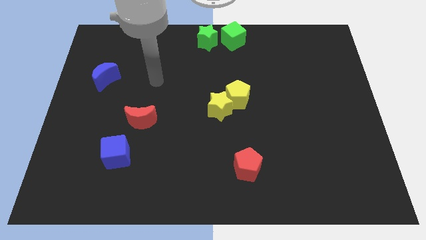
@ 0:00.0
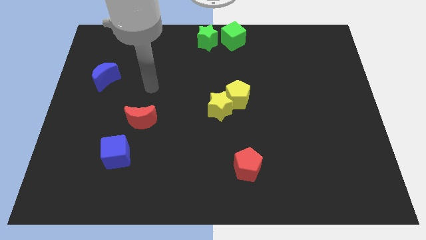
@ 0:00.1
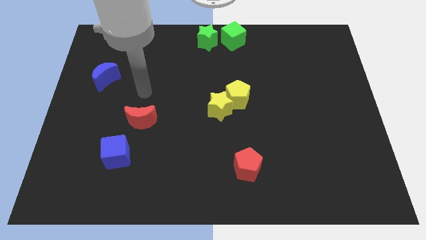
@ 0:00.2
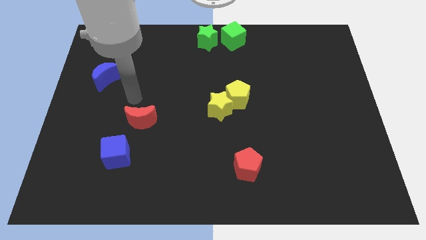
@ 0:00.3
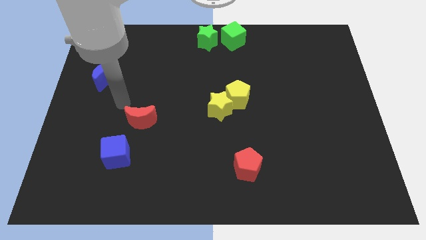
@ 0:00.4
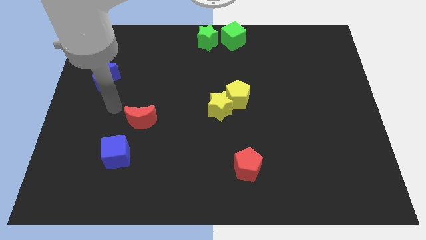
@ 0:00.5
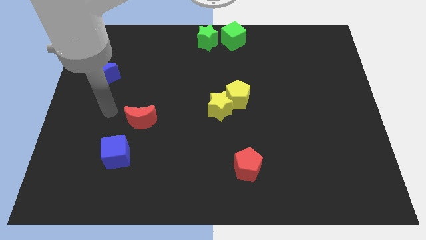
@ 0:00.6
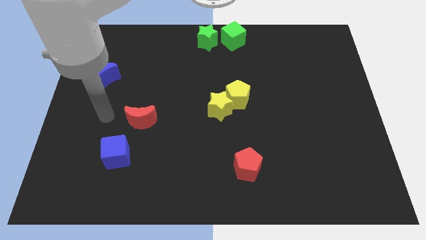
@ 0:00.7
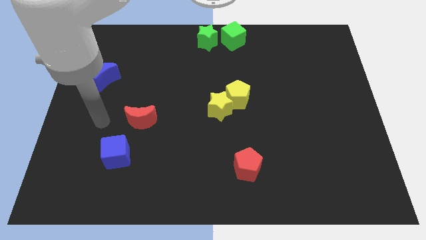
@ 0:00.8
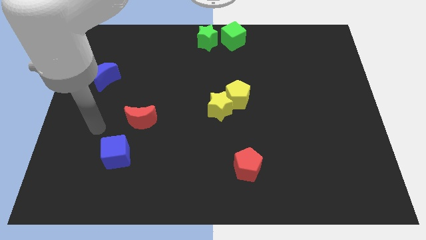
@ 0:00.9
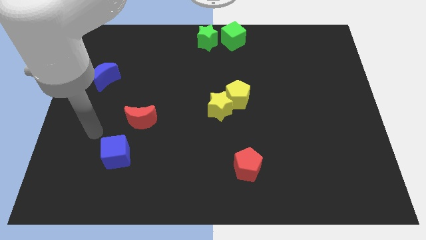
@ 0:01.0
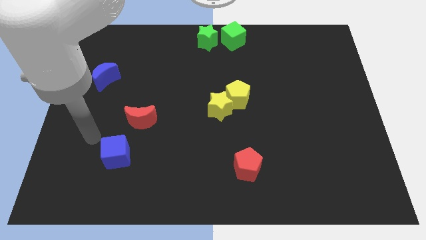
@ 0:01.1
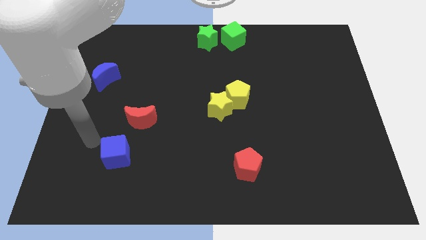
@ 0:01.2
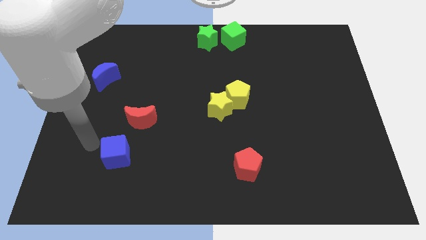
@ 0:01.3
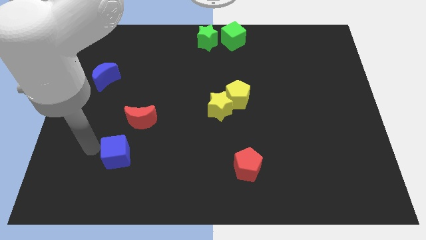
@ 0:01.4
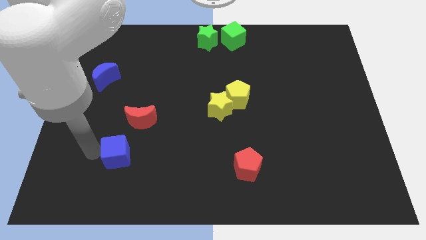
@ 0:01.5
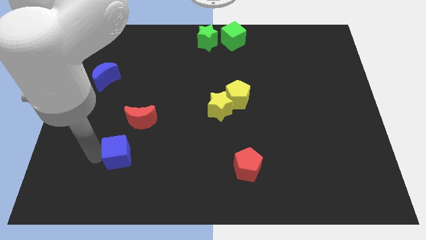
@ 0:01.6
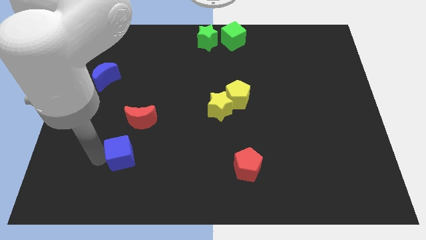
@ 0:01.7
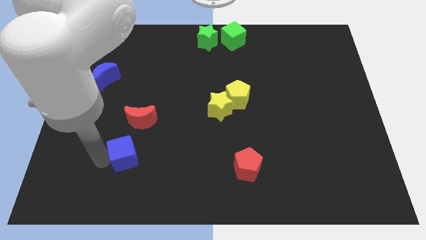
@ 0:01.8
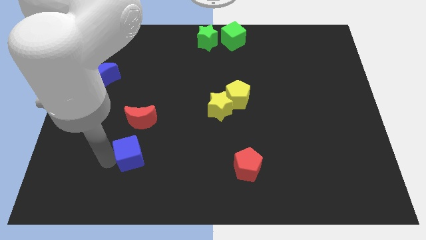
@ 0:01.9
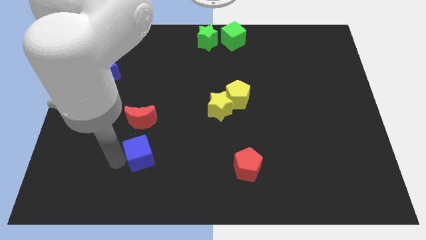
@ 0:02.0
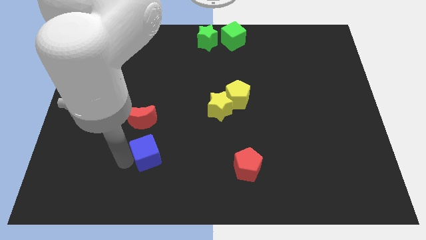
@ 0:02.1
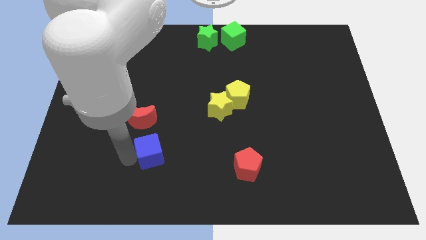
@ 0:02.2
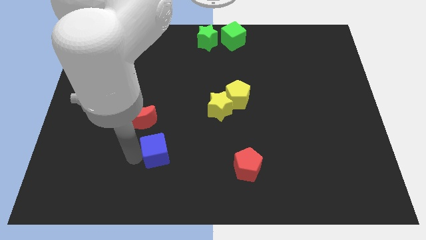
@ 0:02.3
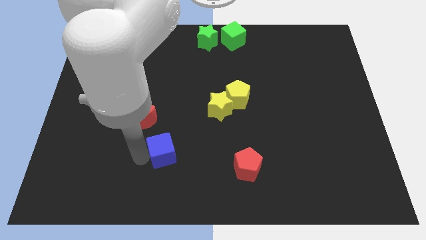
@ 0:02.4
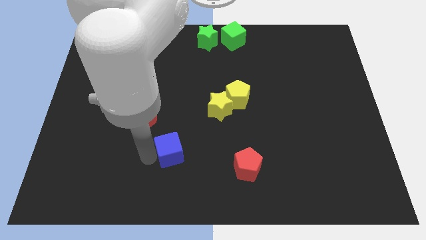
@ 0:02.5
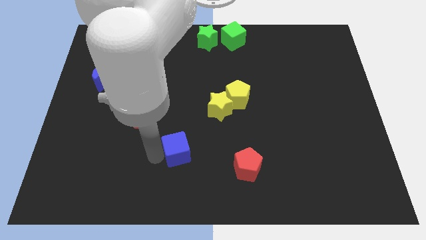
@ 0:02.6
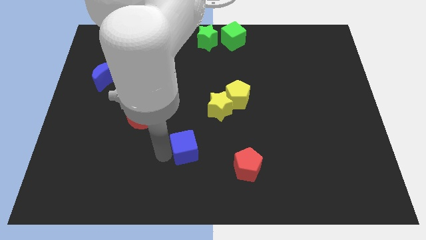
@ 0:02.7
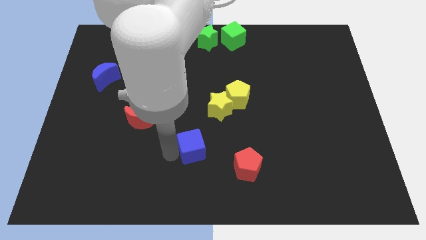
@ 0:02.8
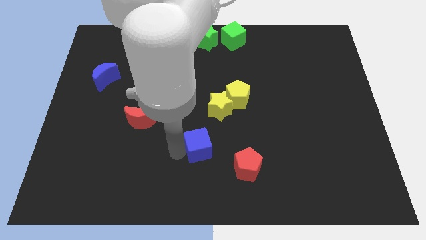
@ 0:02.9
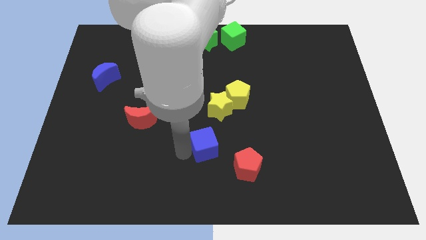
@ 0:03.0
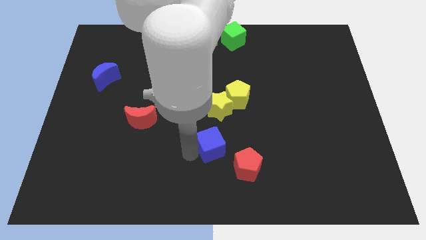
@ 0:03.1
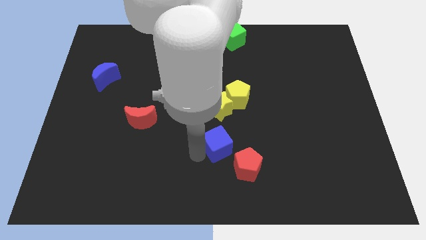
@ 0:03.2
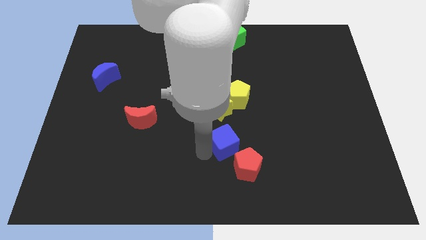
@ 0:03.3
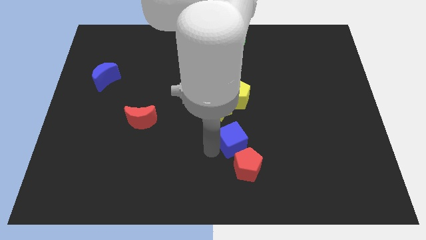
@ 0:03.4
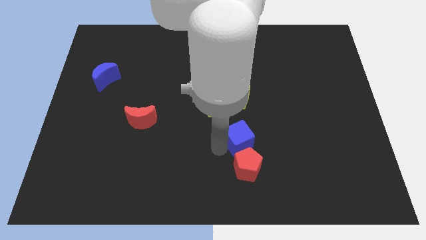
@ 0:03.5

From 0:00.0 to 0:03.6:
arrange the blue cube in between the red pentagon and the yellow star

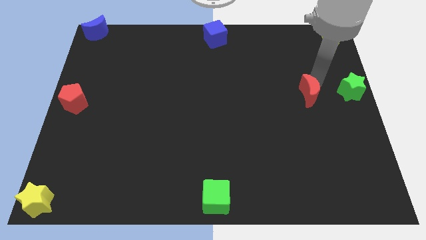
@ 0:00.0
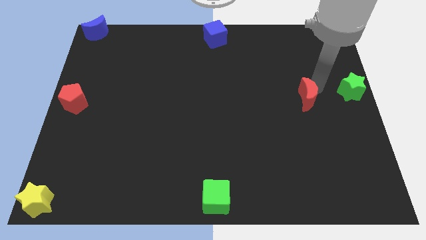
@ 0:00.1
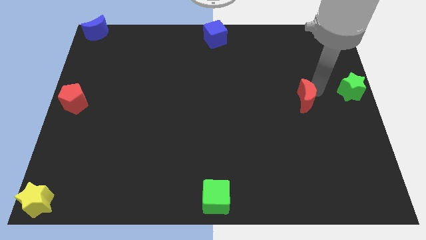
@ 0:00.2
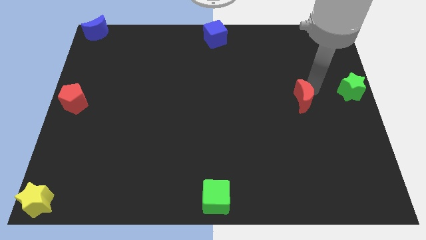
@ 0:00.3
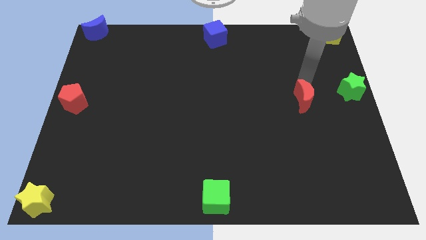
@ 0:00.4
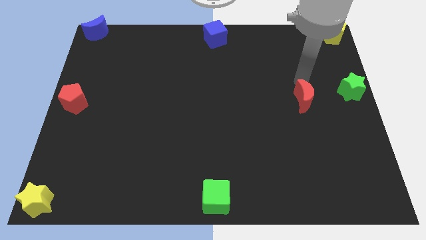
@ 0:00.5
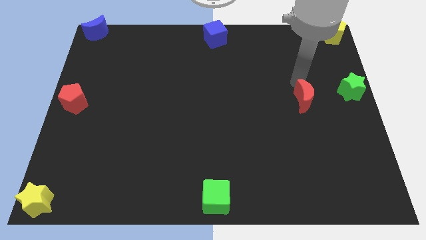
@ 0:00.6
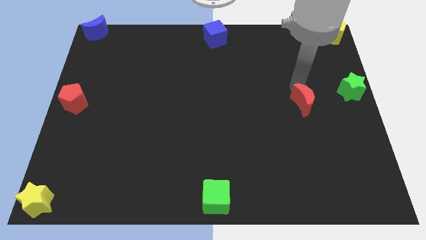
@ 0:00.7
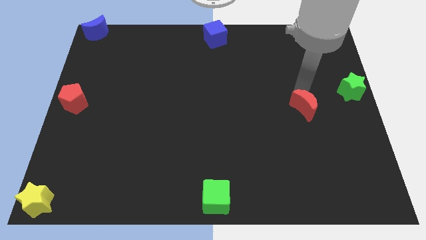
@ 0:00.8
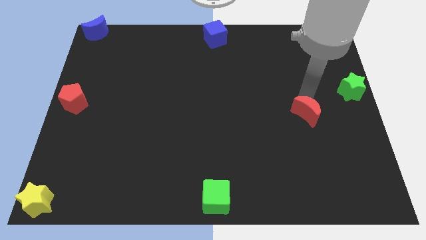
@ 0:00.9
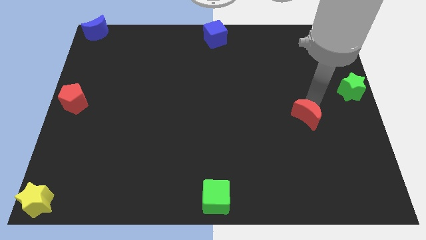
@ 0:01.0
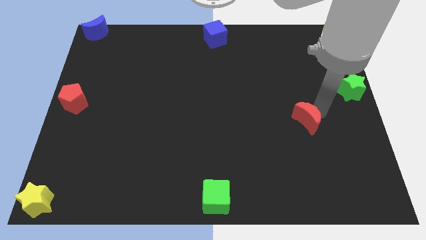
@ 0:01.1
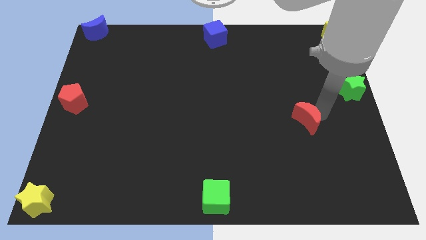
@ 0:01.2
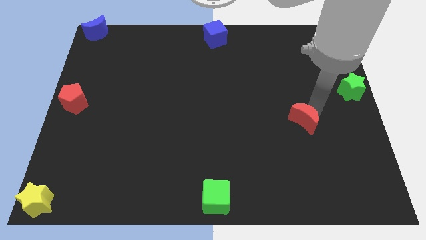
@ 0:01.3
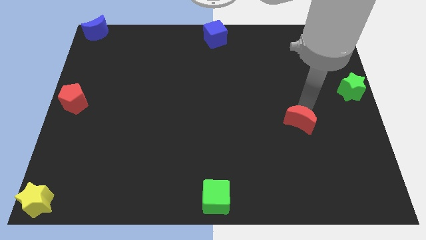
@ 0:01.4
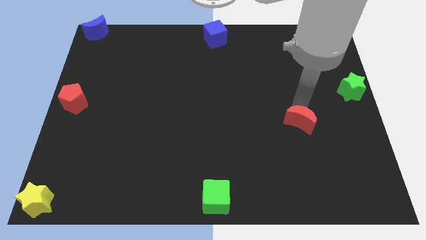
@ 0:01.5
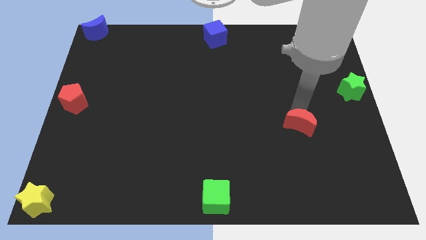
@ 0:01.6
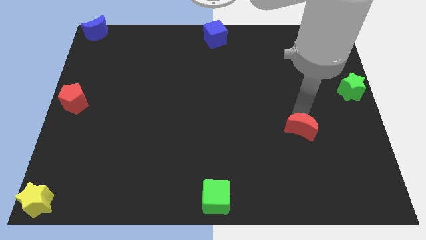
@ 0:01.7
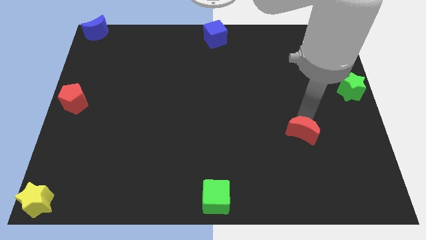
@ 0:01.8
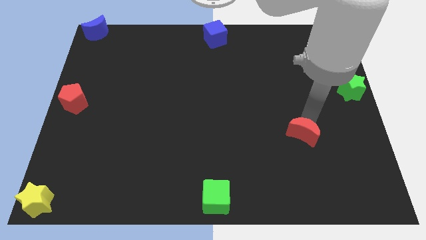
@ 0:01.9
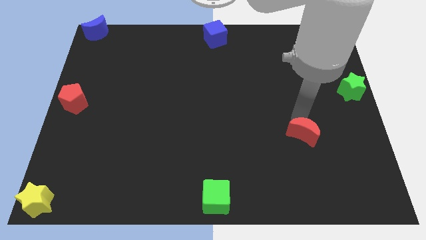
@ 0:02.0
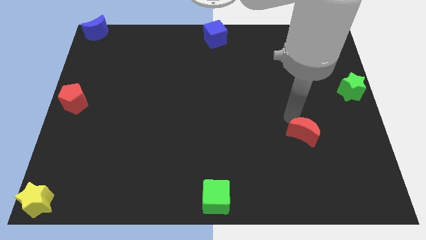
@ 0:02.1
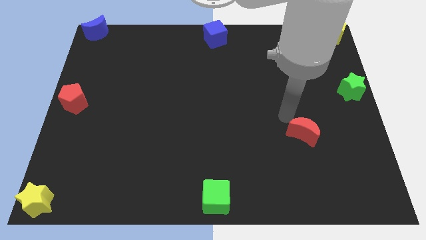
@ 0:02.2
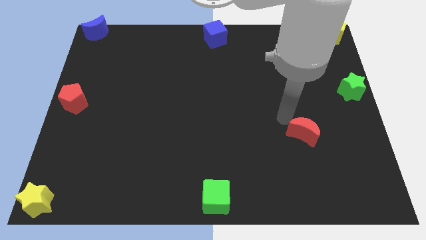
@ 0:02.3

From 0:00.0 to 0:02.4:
place the red moon in between the green blocks

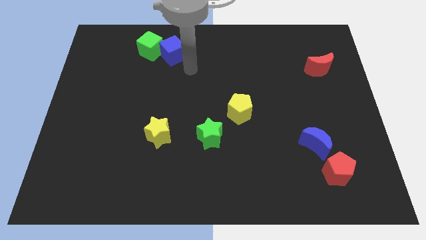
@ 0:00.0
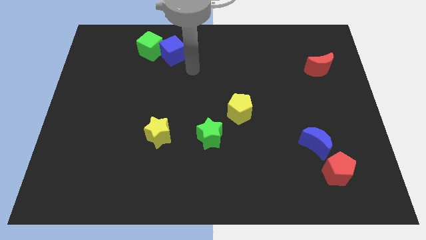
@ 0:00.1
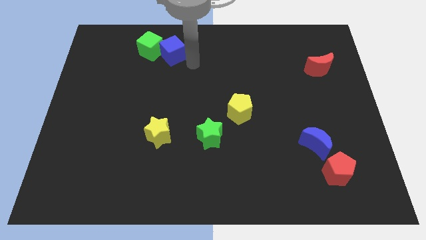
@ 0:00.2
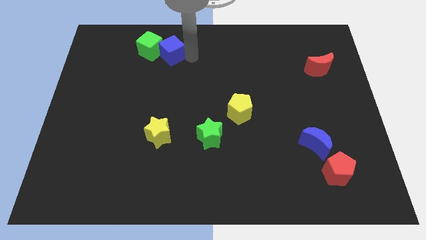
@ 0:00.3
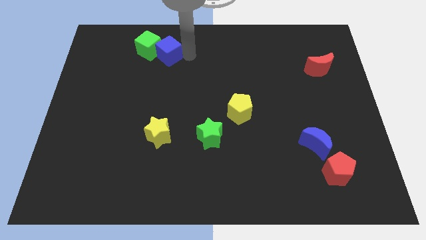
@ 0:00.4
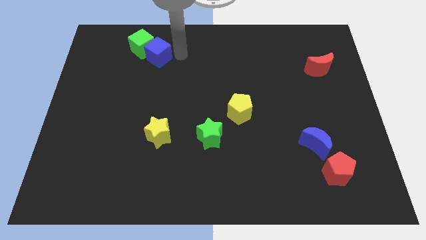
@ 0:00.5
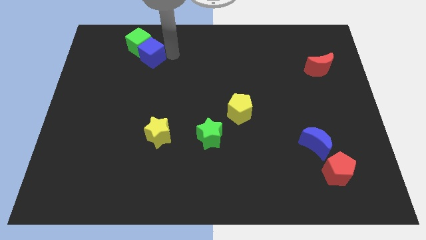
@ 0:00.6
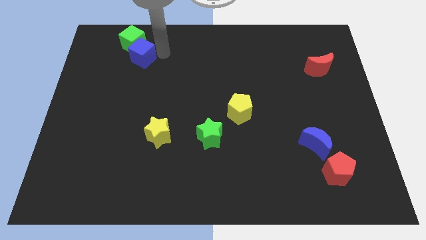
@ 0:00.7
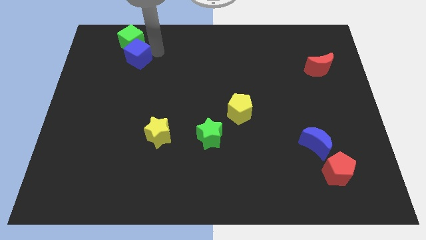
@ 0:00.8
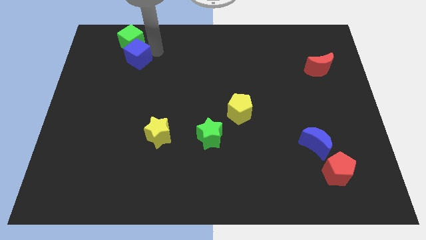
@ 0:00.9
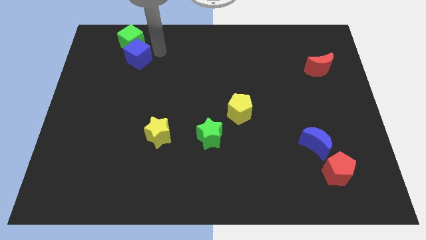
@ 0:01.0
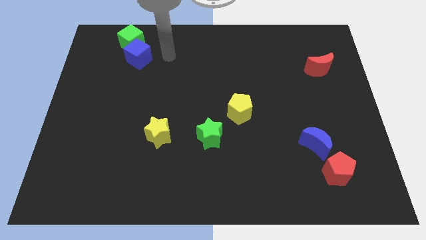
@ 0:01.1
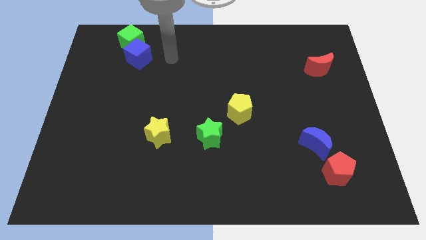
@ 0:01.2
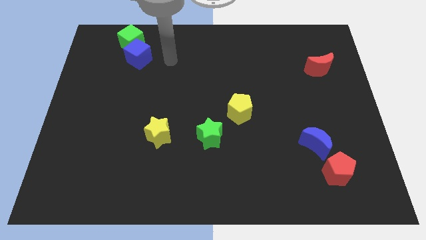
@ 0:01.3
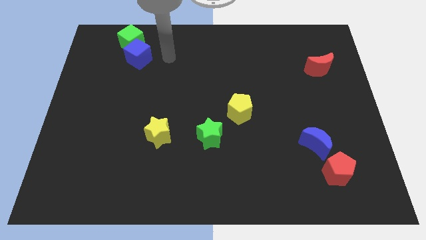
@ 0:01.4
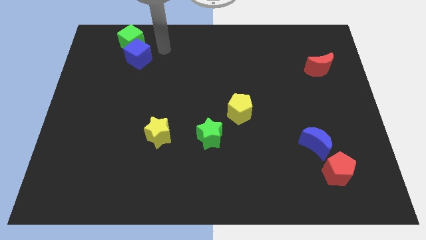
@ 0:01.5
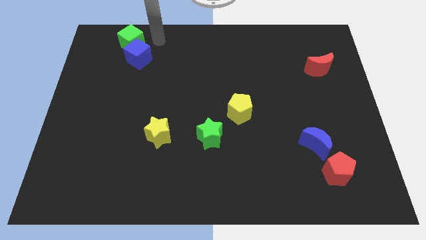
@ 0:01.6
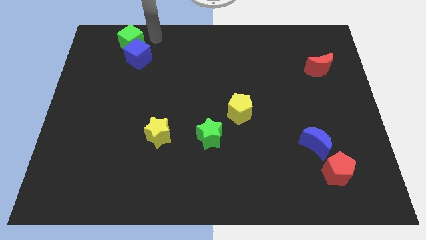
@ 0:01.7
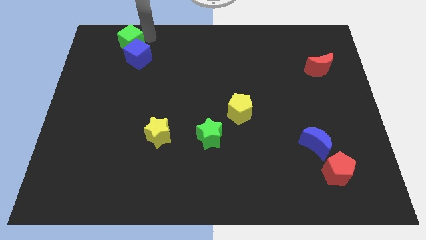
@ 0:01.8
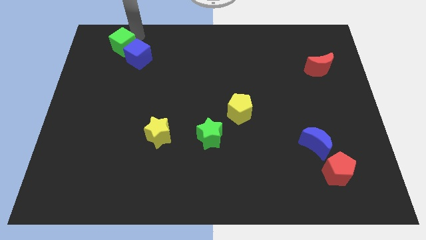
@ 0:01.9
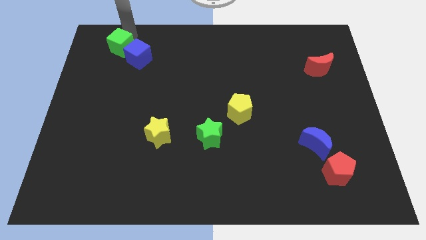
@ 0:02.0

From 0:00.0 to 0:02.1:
push the cubes towards top left side

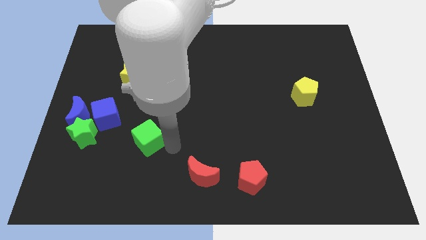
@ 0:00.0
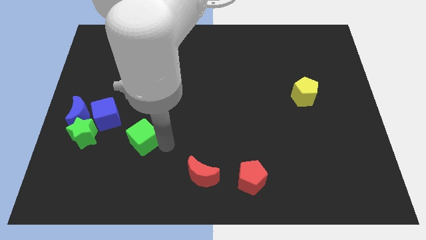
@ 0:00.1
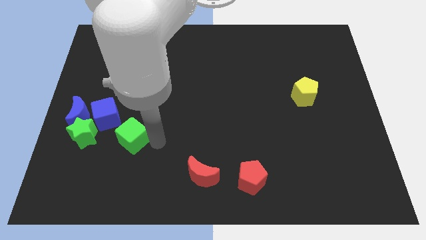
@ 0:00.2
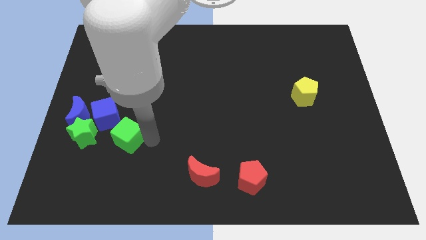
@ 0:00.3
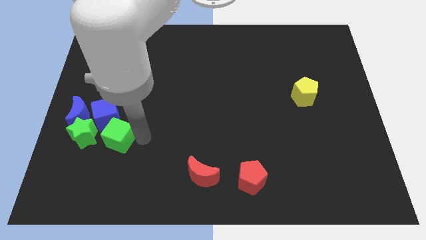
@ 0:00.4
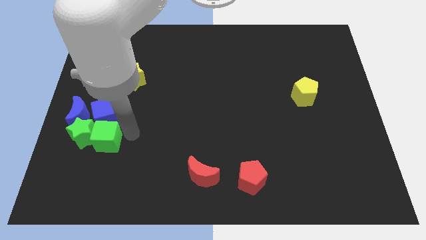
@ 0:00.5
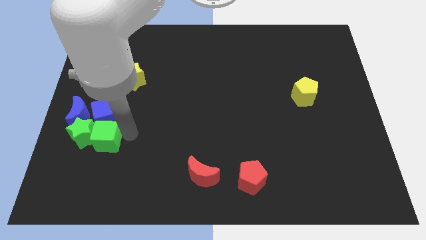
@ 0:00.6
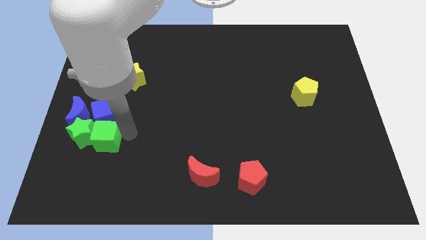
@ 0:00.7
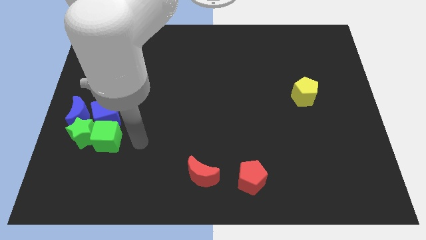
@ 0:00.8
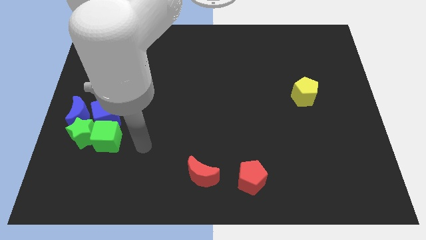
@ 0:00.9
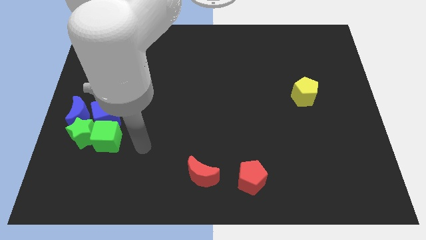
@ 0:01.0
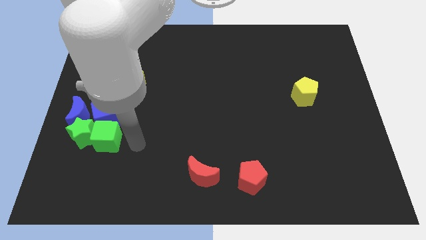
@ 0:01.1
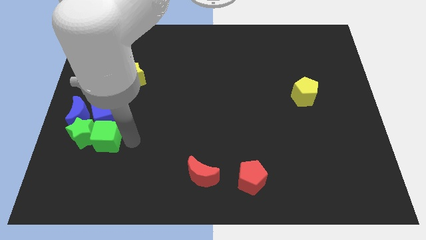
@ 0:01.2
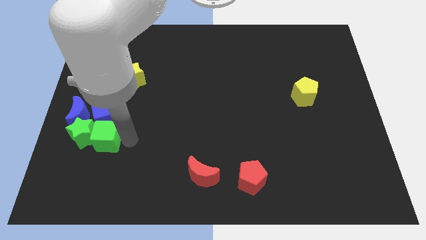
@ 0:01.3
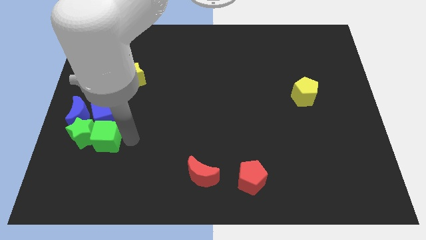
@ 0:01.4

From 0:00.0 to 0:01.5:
place the green cube below the blue cube
